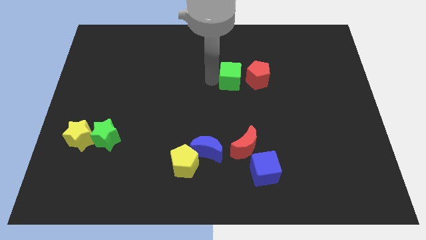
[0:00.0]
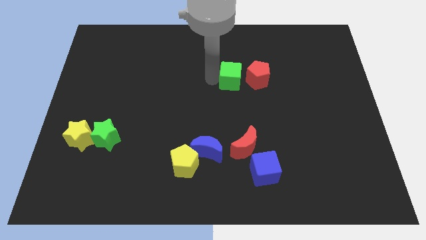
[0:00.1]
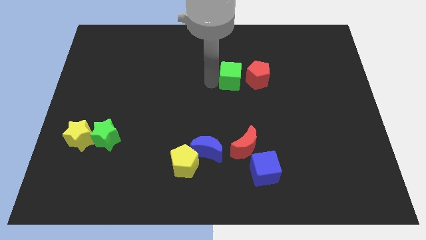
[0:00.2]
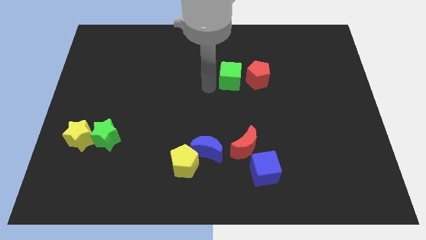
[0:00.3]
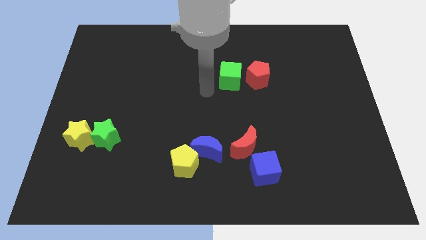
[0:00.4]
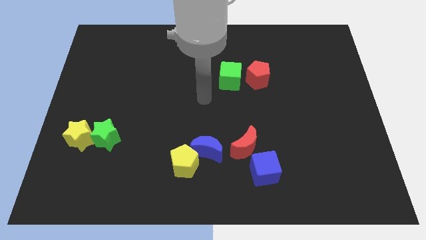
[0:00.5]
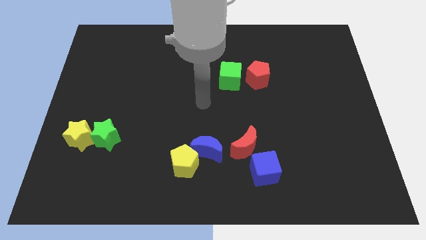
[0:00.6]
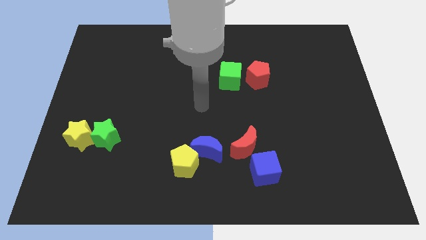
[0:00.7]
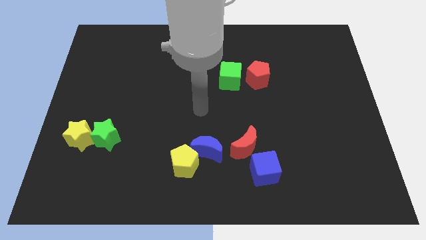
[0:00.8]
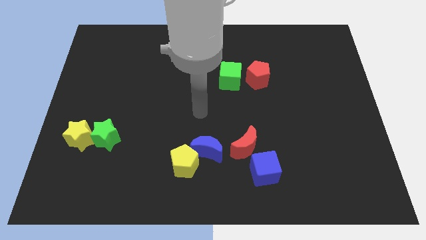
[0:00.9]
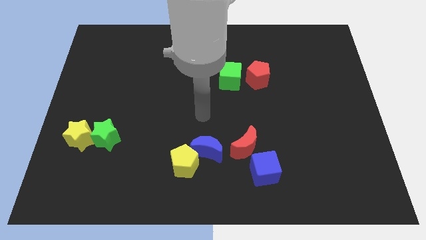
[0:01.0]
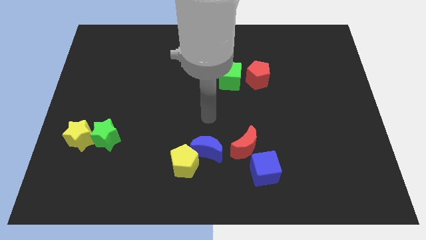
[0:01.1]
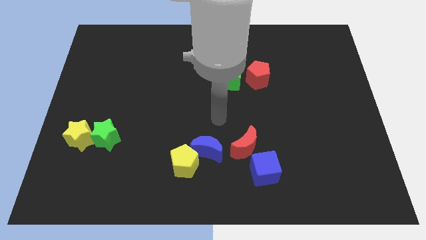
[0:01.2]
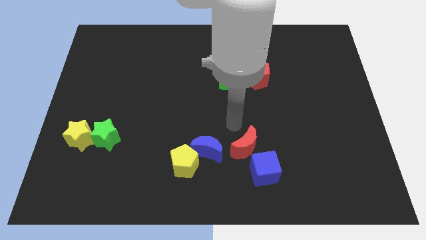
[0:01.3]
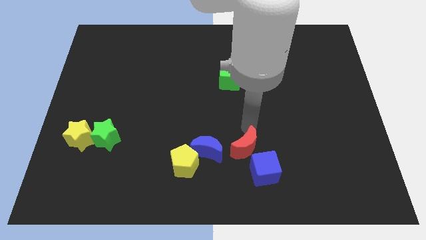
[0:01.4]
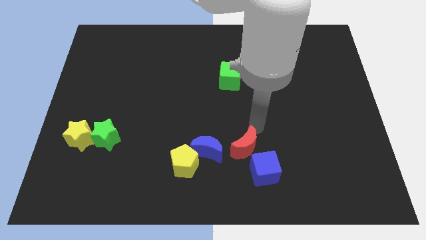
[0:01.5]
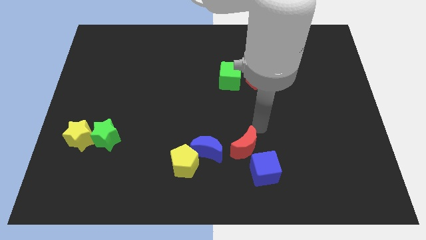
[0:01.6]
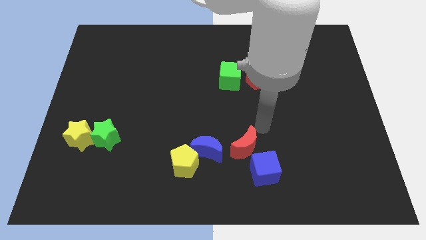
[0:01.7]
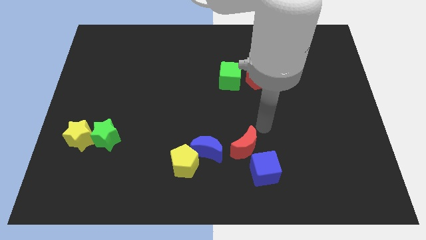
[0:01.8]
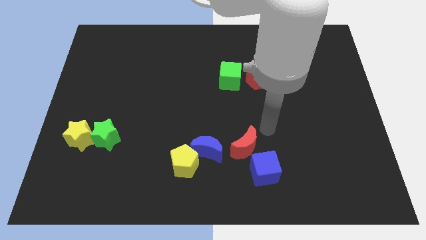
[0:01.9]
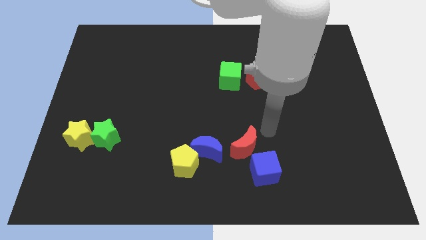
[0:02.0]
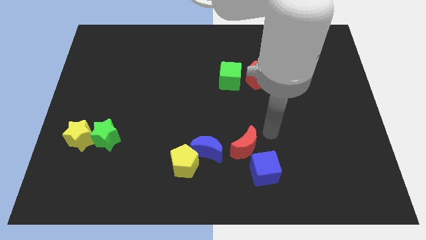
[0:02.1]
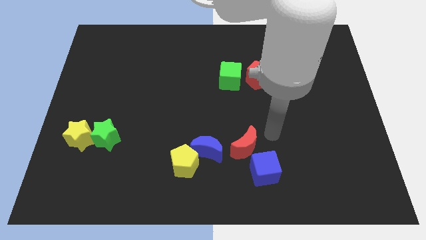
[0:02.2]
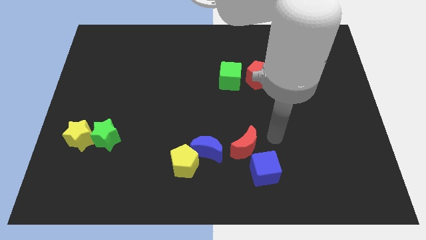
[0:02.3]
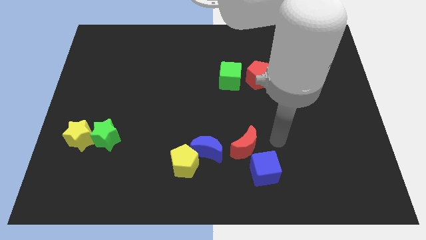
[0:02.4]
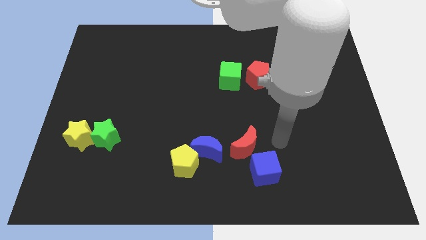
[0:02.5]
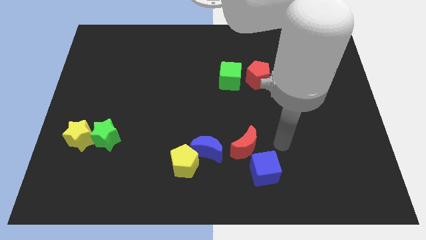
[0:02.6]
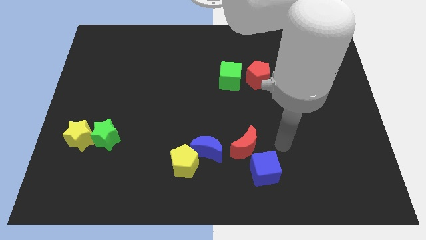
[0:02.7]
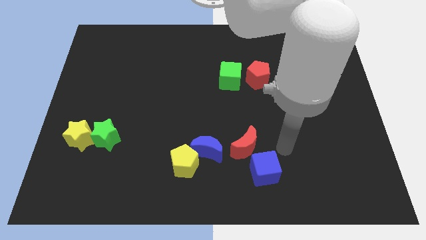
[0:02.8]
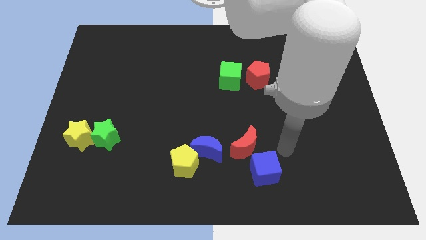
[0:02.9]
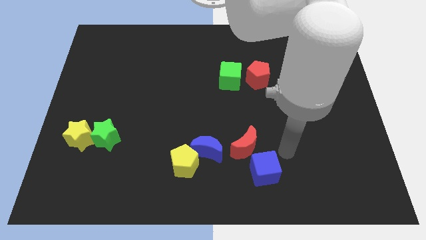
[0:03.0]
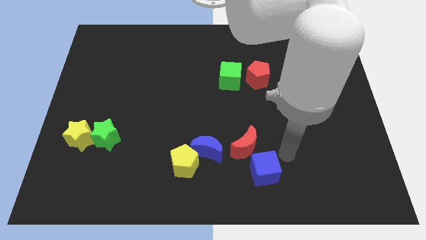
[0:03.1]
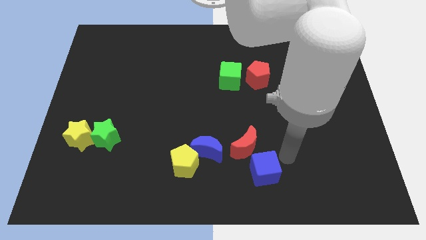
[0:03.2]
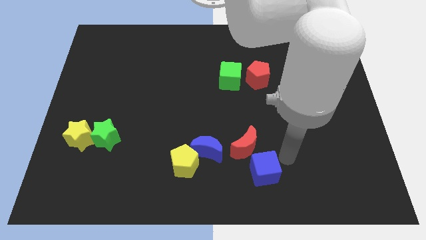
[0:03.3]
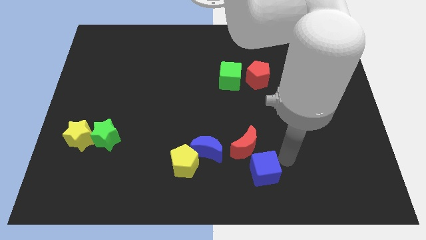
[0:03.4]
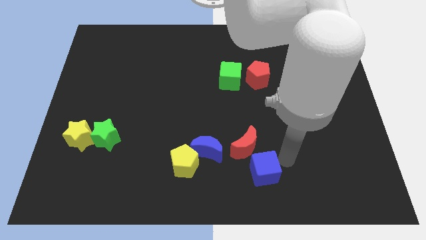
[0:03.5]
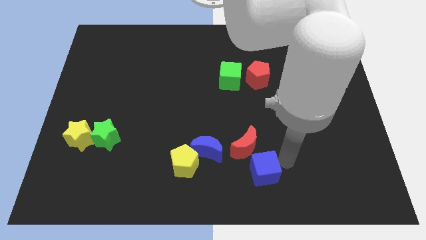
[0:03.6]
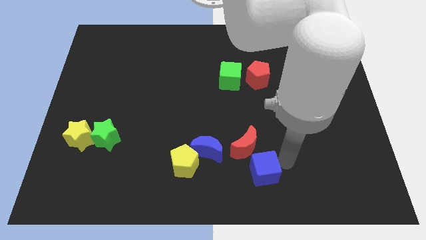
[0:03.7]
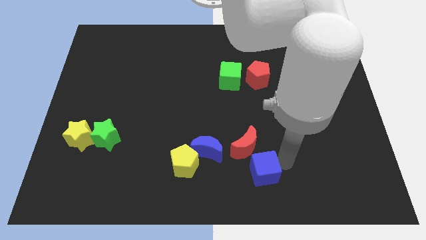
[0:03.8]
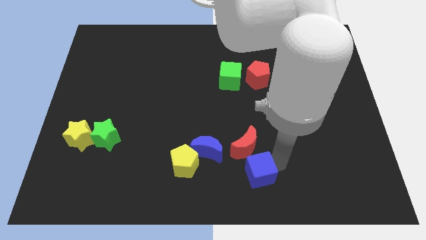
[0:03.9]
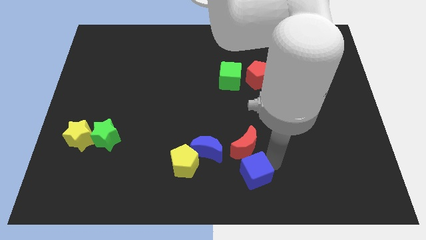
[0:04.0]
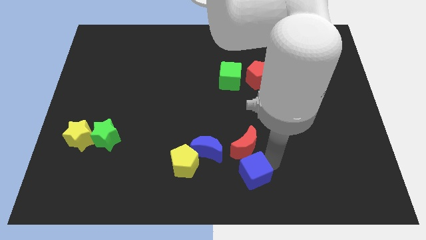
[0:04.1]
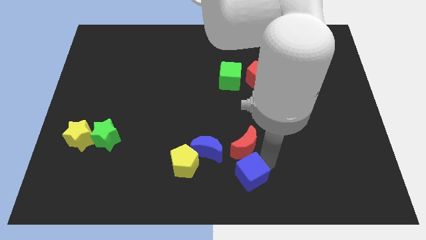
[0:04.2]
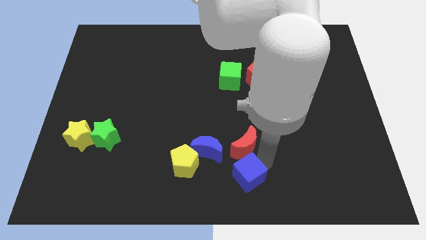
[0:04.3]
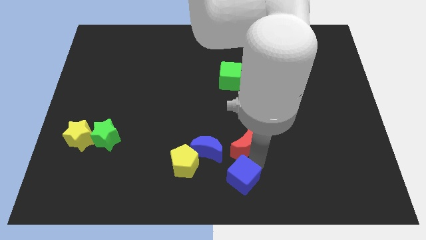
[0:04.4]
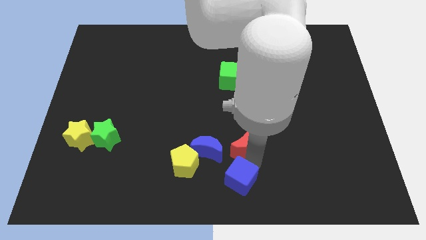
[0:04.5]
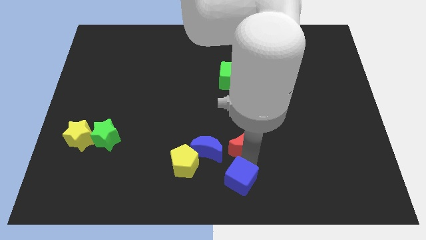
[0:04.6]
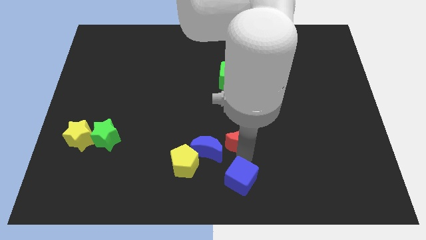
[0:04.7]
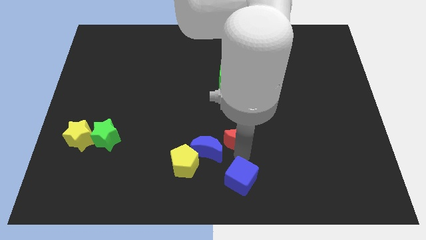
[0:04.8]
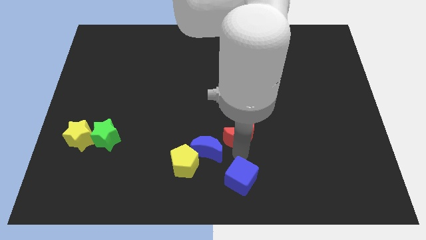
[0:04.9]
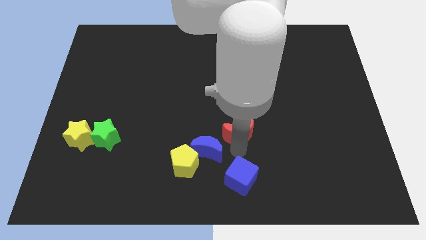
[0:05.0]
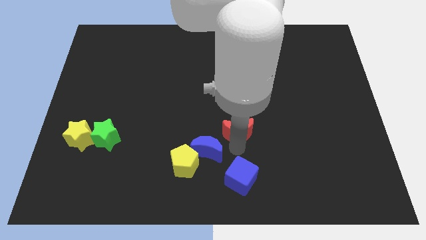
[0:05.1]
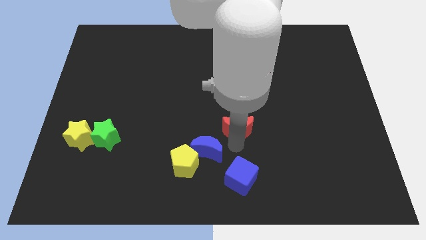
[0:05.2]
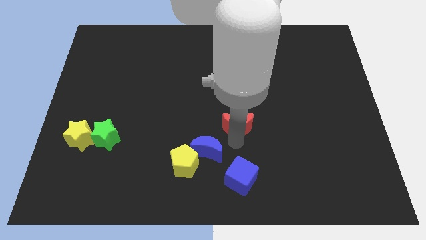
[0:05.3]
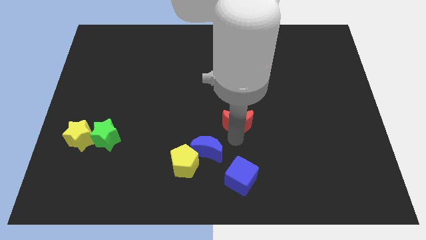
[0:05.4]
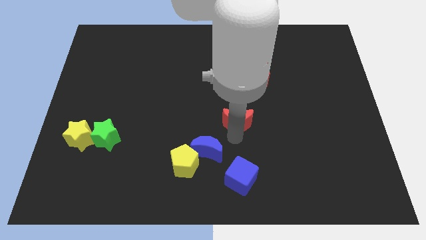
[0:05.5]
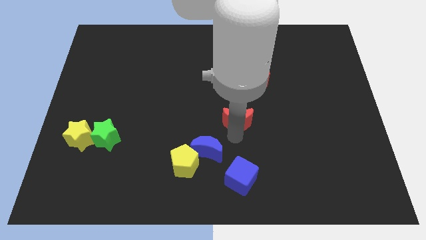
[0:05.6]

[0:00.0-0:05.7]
separate blue cube and red moon

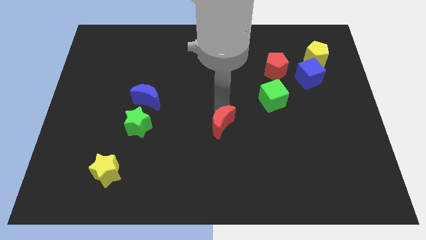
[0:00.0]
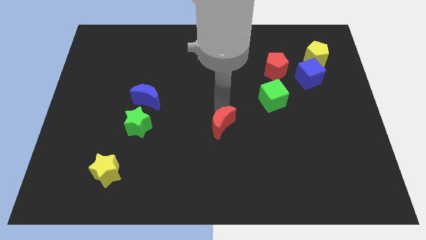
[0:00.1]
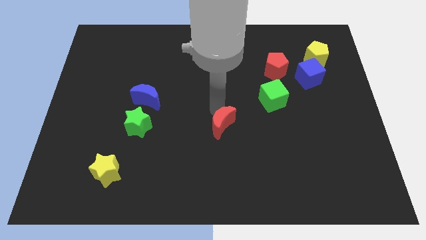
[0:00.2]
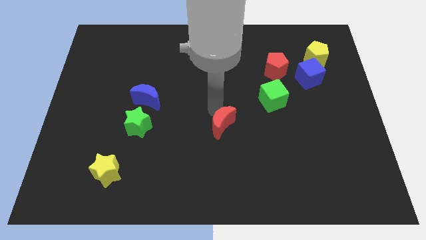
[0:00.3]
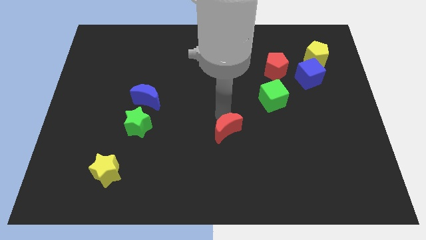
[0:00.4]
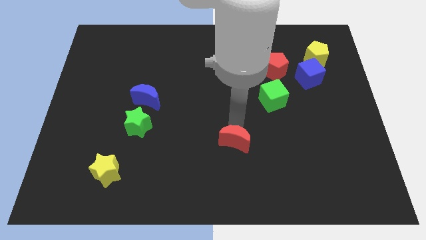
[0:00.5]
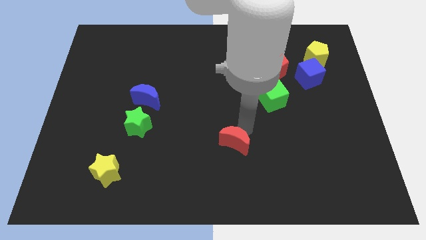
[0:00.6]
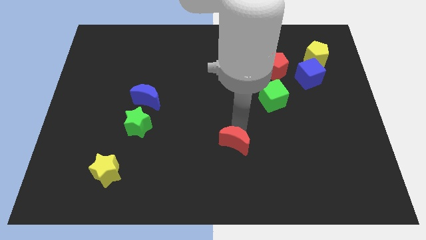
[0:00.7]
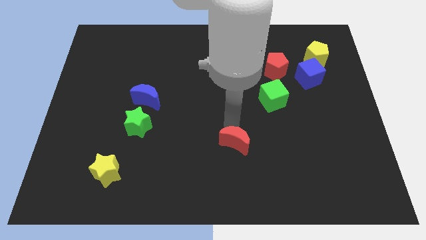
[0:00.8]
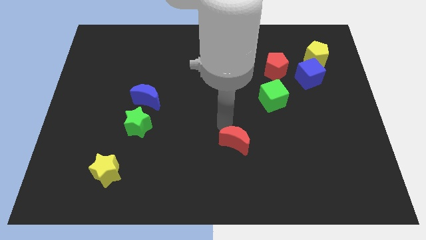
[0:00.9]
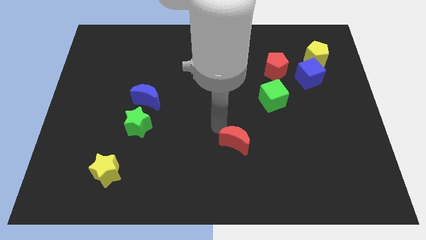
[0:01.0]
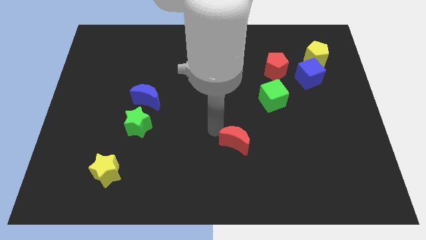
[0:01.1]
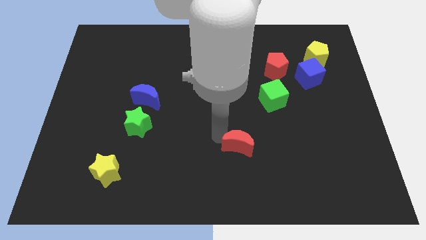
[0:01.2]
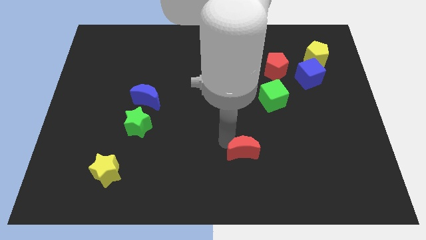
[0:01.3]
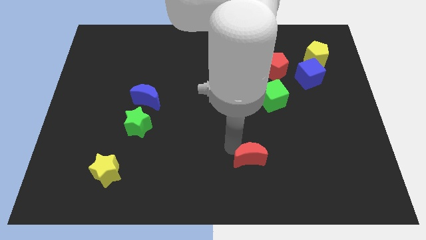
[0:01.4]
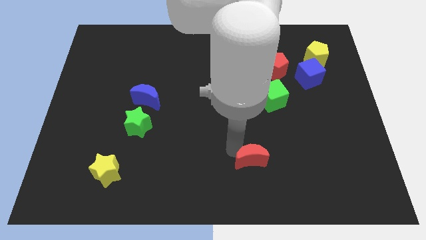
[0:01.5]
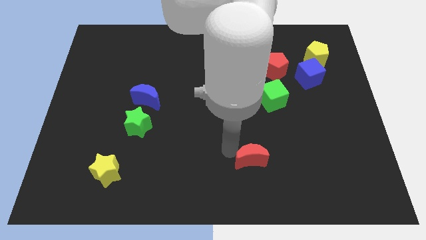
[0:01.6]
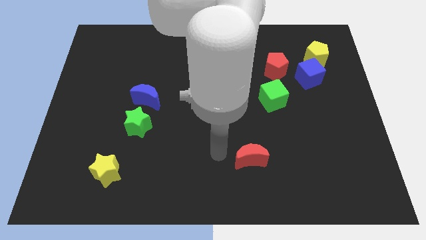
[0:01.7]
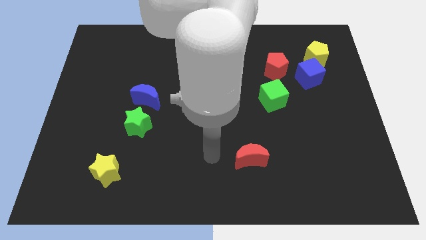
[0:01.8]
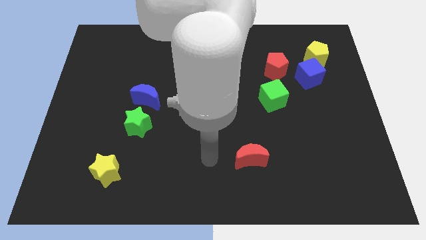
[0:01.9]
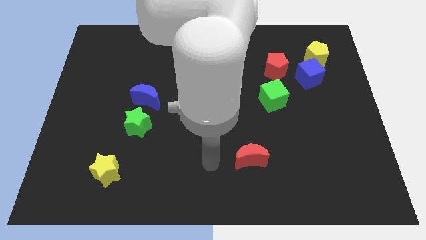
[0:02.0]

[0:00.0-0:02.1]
move the red moon towards the bottom of the board

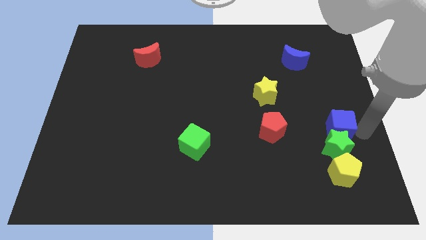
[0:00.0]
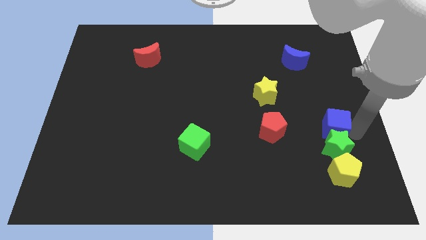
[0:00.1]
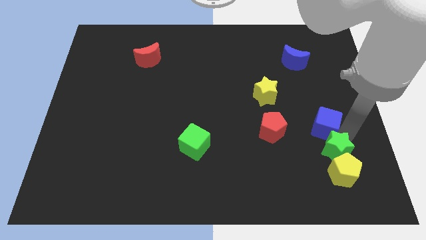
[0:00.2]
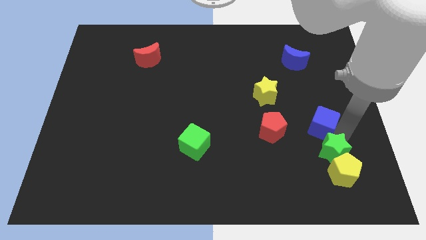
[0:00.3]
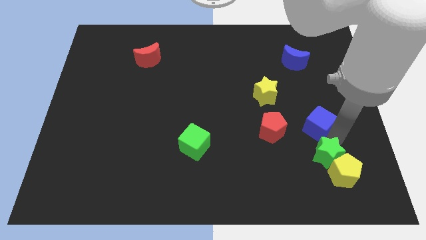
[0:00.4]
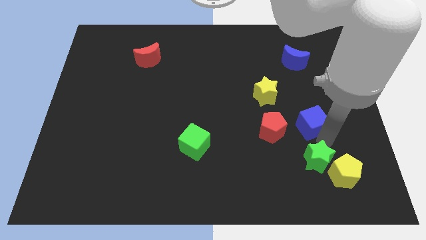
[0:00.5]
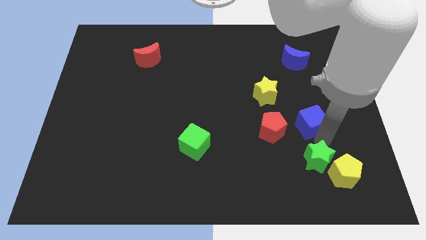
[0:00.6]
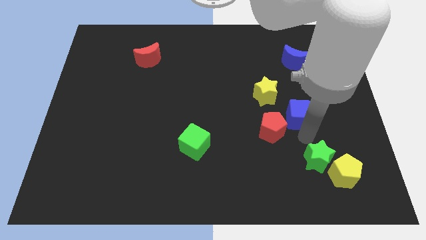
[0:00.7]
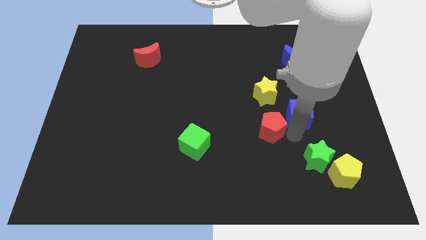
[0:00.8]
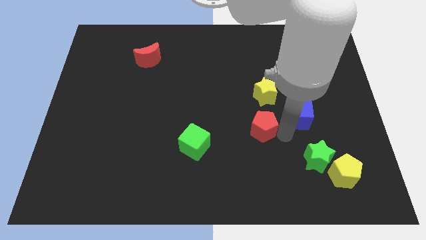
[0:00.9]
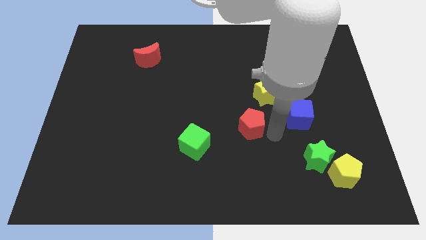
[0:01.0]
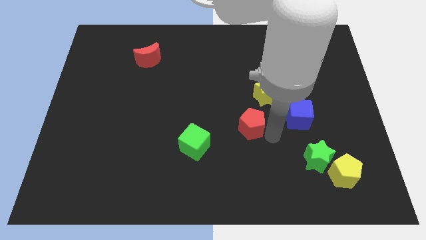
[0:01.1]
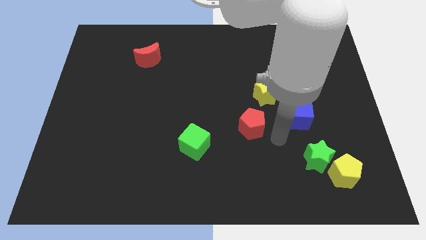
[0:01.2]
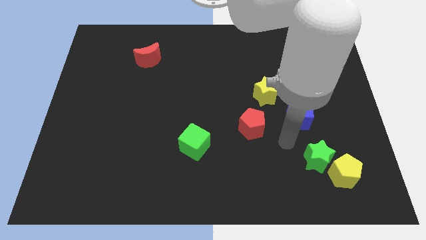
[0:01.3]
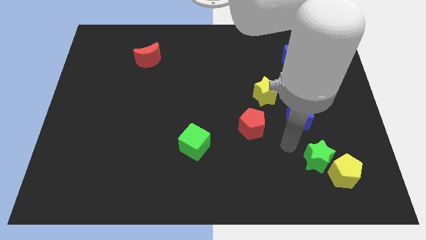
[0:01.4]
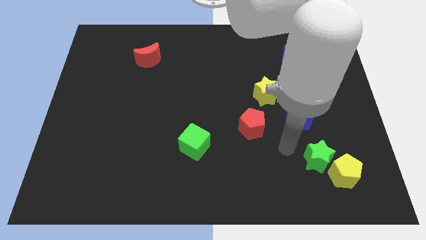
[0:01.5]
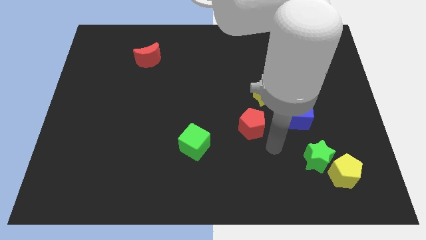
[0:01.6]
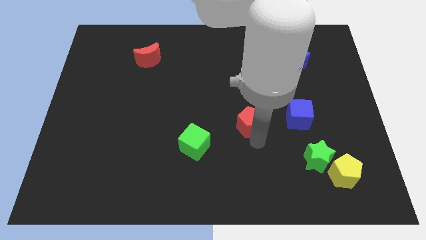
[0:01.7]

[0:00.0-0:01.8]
push blue cube diagonally to the yellow star
